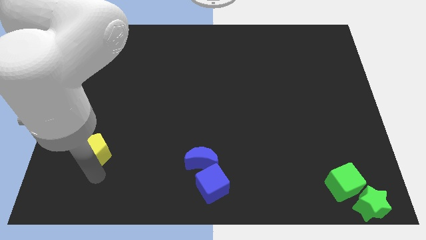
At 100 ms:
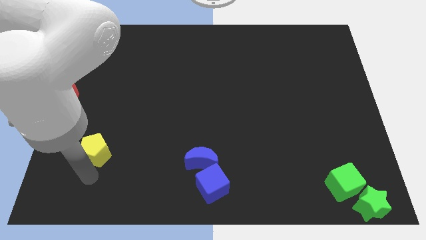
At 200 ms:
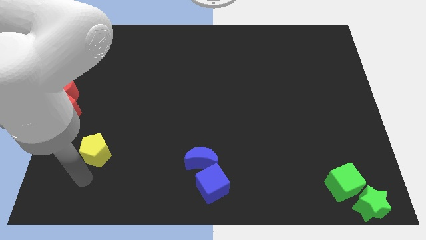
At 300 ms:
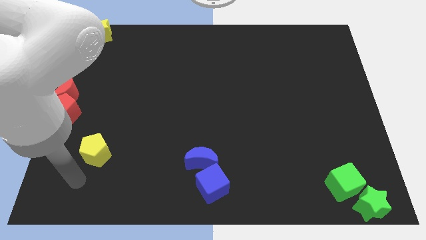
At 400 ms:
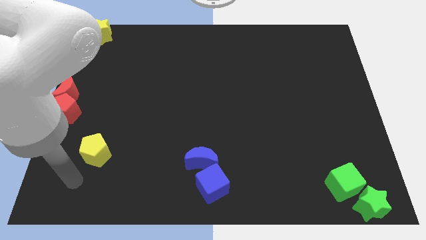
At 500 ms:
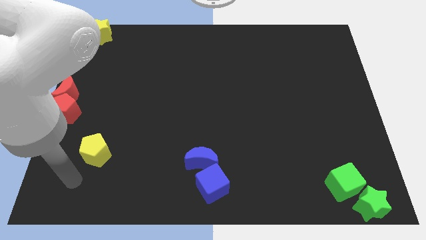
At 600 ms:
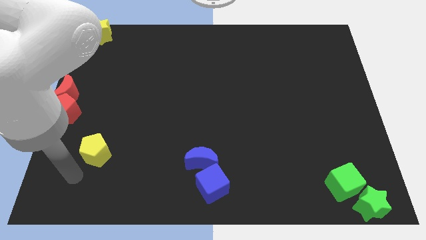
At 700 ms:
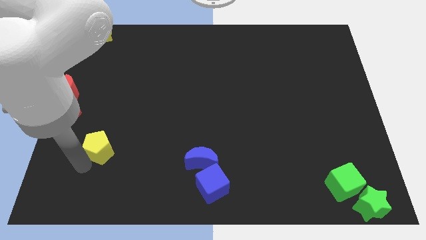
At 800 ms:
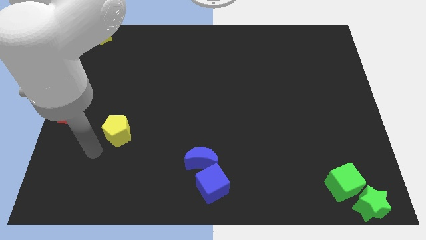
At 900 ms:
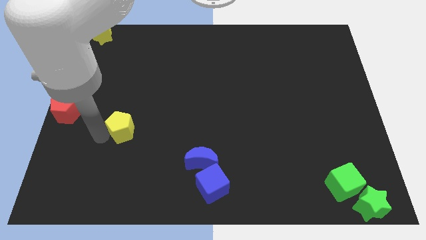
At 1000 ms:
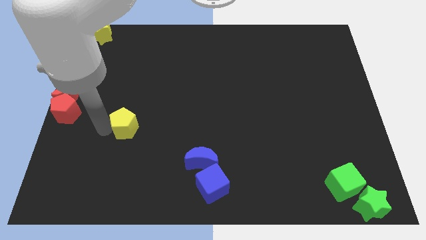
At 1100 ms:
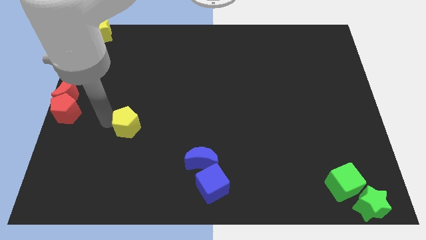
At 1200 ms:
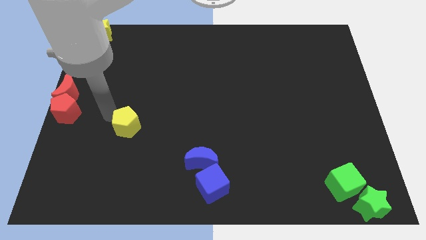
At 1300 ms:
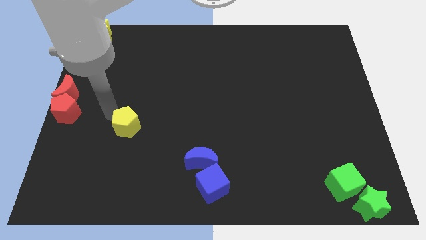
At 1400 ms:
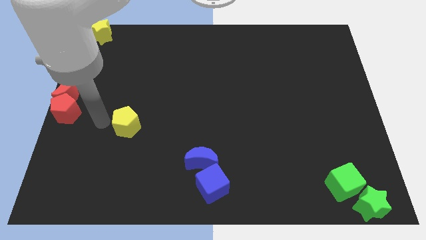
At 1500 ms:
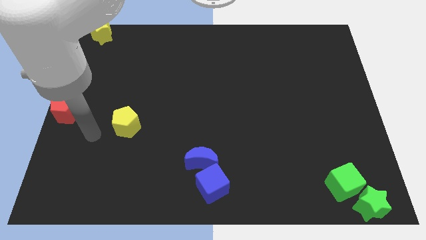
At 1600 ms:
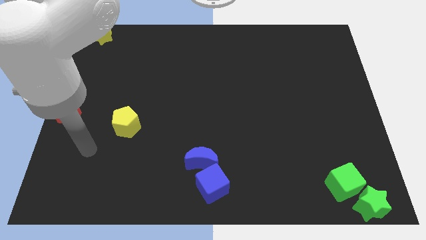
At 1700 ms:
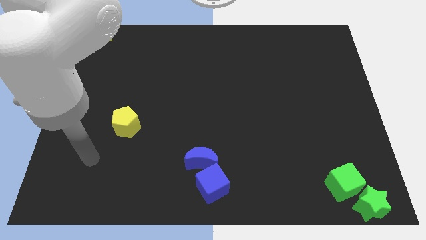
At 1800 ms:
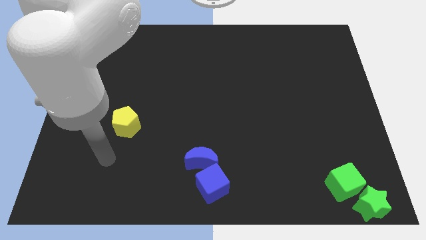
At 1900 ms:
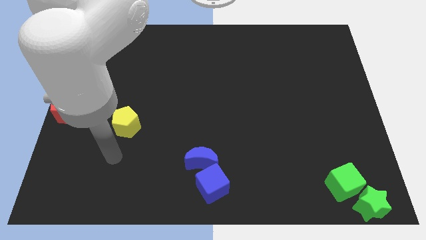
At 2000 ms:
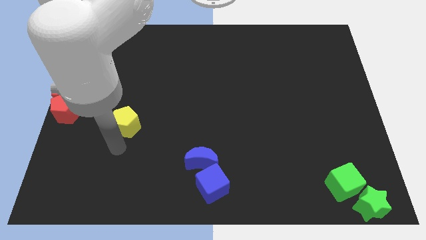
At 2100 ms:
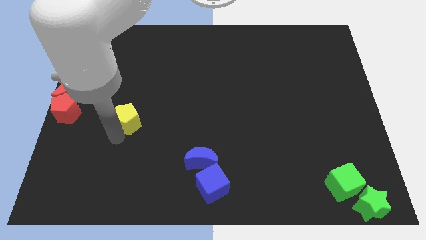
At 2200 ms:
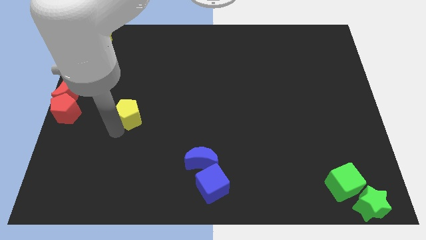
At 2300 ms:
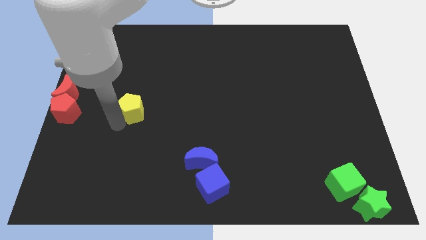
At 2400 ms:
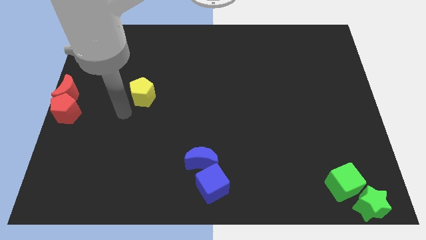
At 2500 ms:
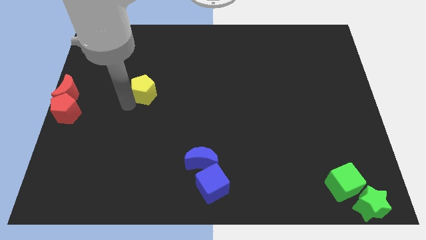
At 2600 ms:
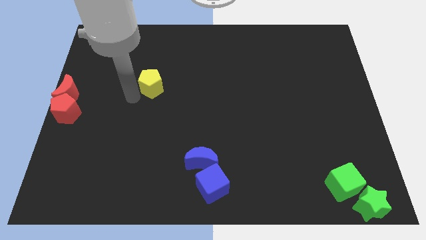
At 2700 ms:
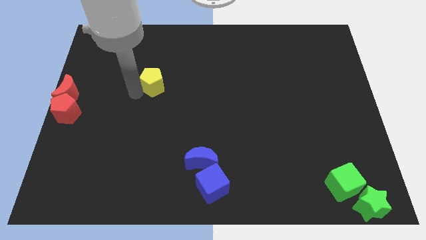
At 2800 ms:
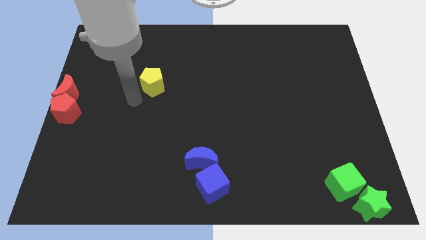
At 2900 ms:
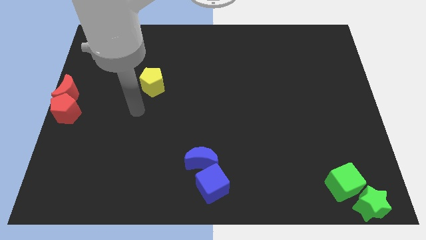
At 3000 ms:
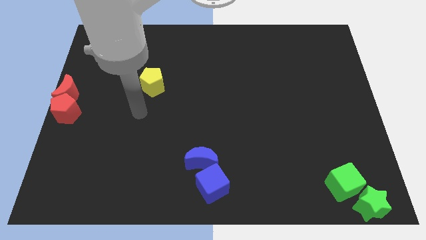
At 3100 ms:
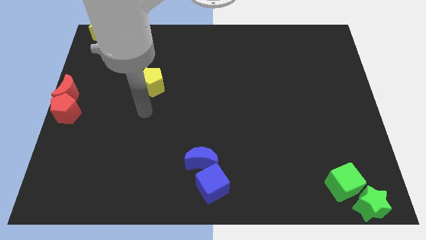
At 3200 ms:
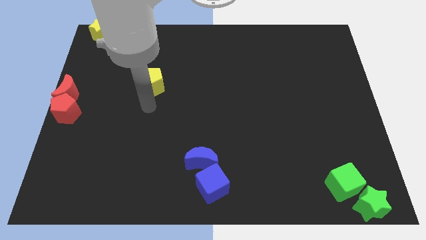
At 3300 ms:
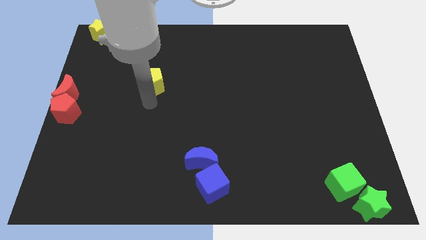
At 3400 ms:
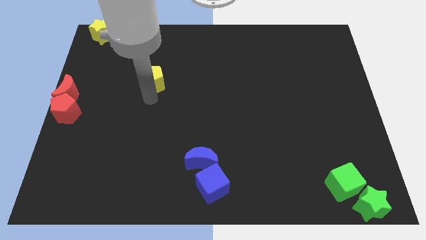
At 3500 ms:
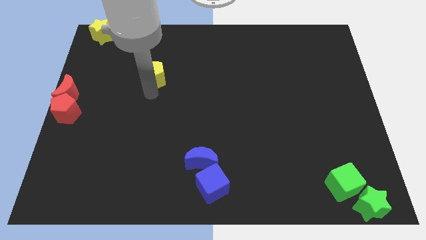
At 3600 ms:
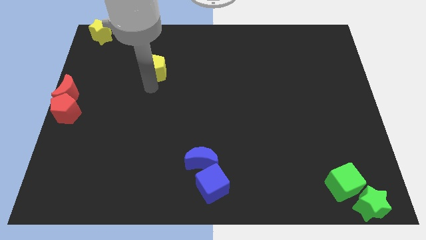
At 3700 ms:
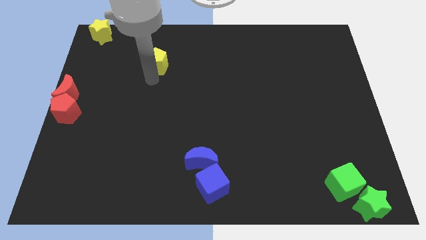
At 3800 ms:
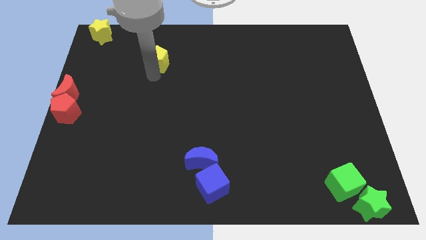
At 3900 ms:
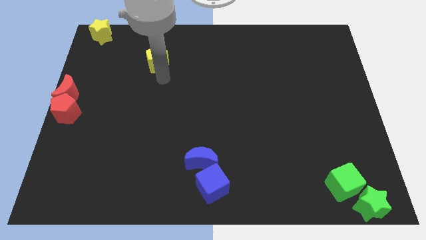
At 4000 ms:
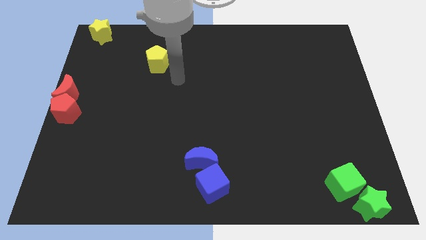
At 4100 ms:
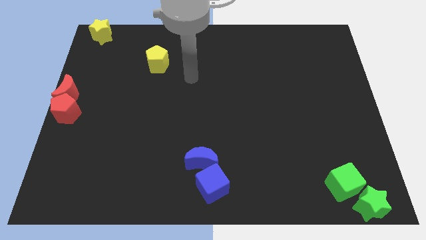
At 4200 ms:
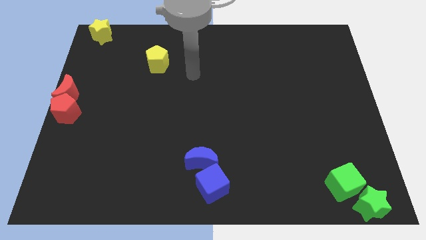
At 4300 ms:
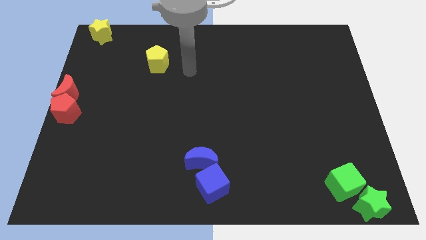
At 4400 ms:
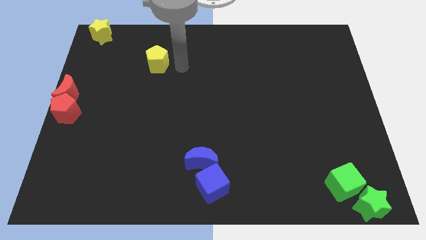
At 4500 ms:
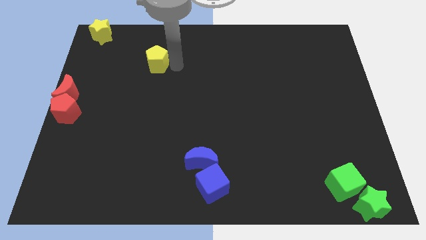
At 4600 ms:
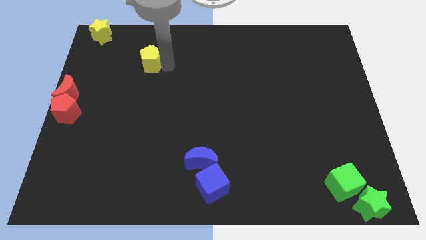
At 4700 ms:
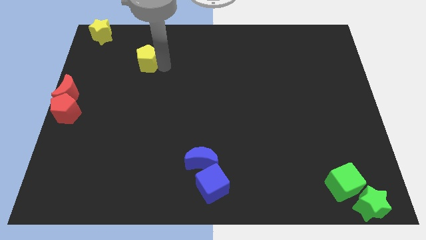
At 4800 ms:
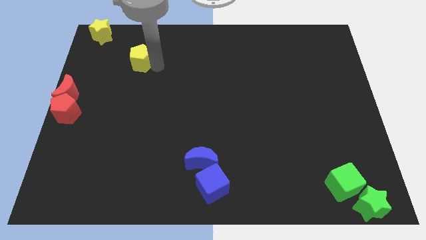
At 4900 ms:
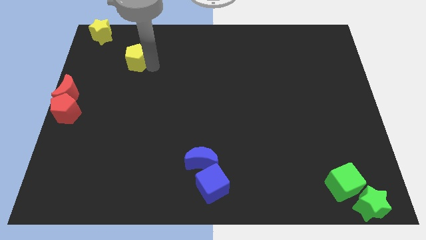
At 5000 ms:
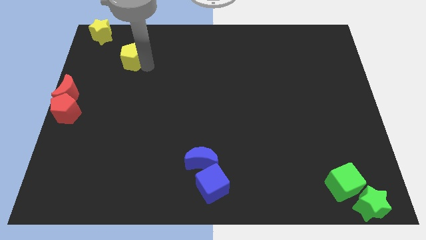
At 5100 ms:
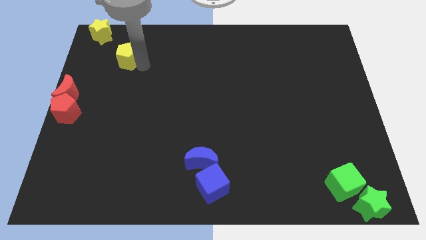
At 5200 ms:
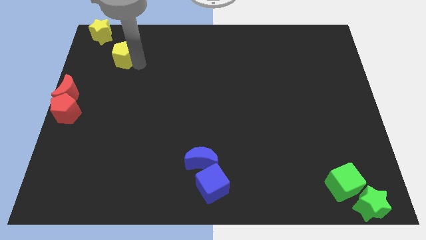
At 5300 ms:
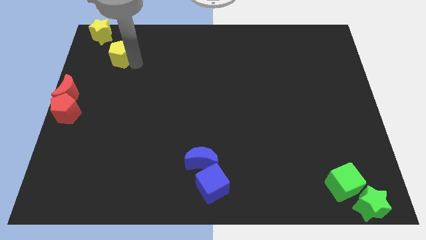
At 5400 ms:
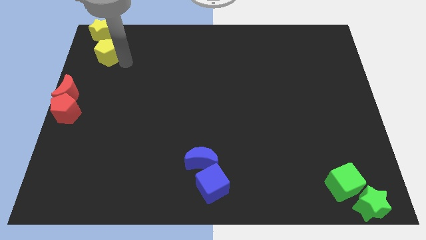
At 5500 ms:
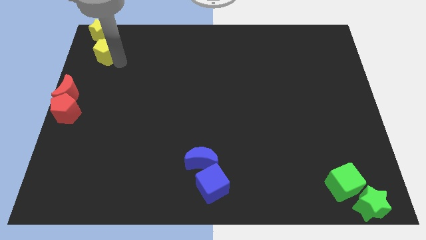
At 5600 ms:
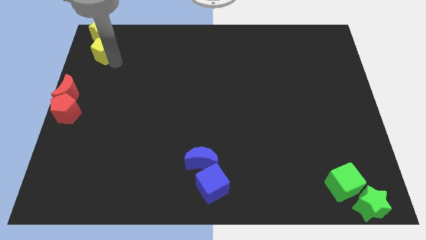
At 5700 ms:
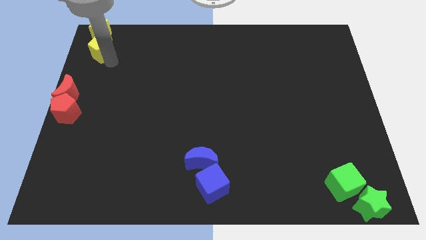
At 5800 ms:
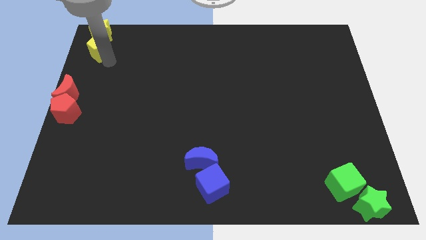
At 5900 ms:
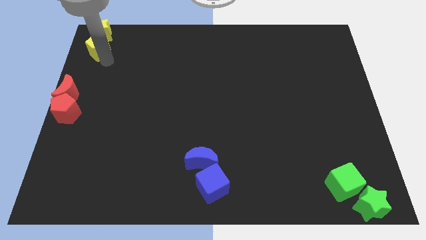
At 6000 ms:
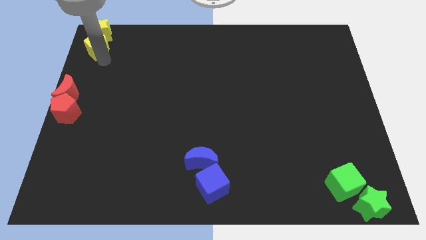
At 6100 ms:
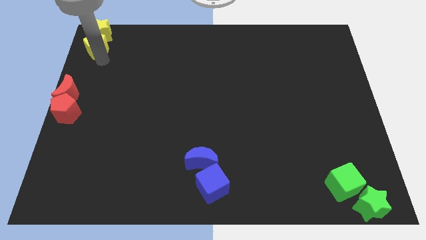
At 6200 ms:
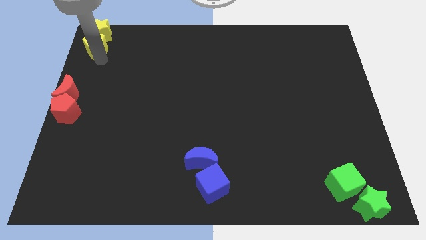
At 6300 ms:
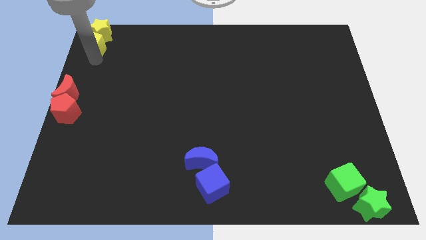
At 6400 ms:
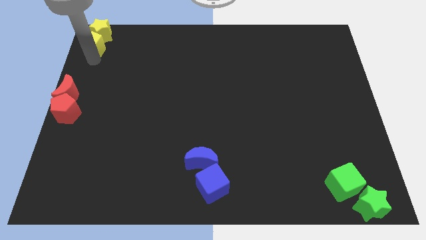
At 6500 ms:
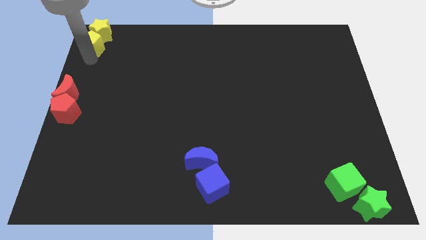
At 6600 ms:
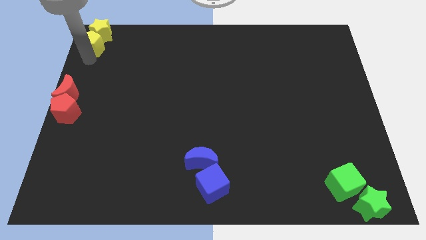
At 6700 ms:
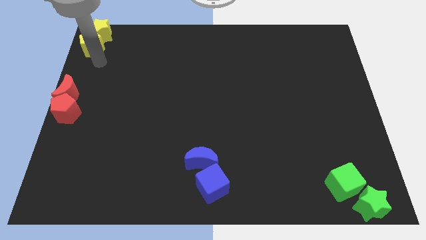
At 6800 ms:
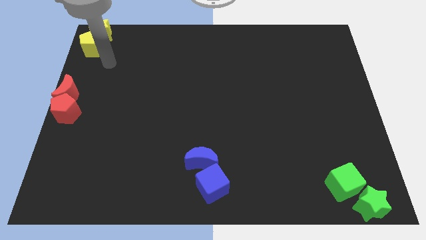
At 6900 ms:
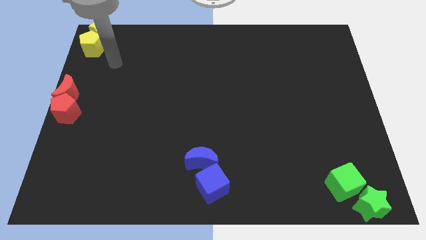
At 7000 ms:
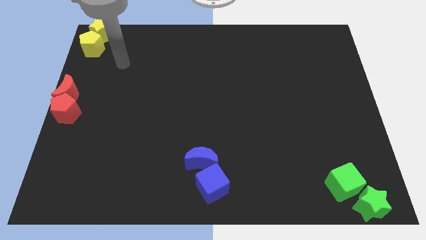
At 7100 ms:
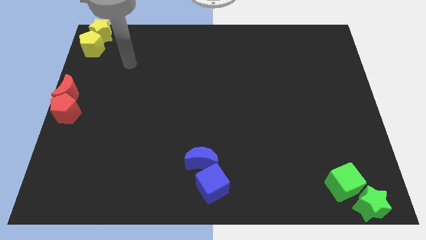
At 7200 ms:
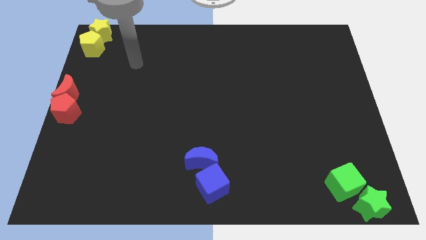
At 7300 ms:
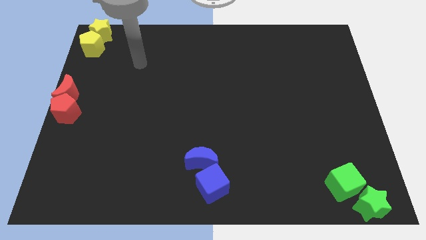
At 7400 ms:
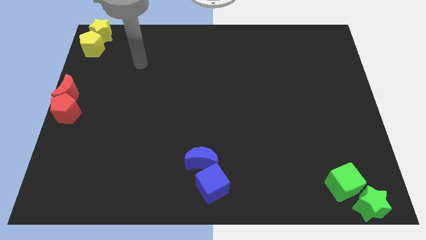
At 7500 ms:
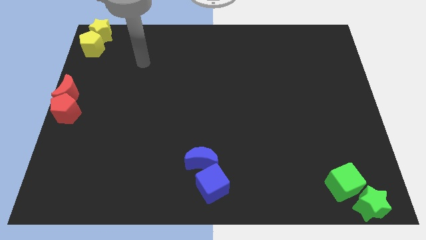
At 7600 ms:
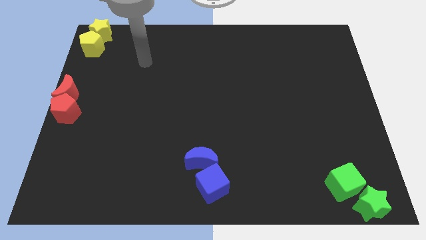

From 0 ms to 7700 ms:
move the yellow pentagon to the yellow star

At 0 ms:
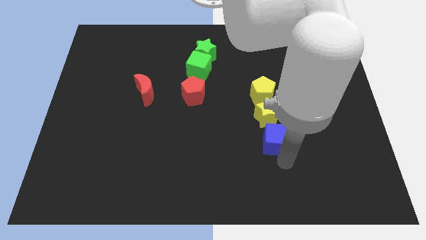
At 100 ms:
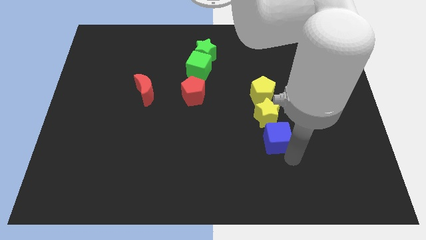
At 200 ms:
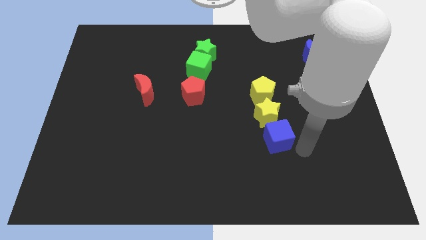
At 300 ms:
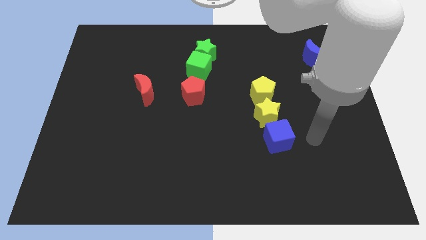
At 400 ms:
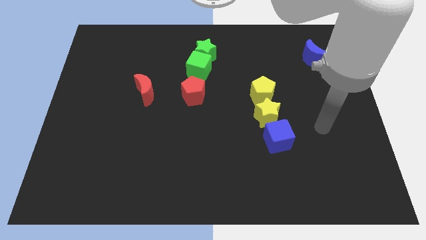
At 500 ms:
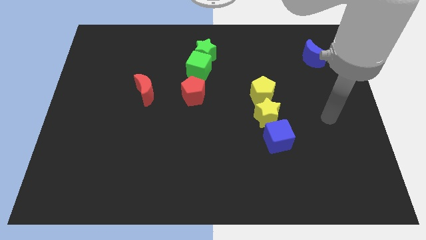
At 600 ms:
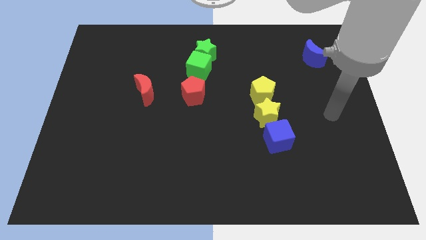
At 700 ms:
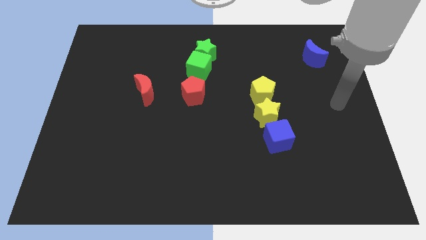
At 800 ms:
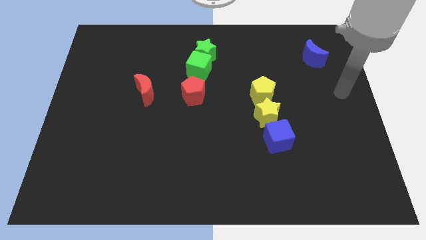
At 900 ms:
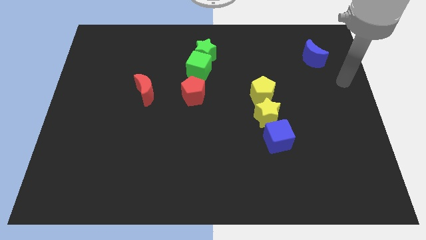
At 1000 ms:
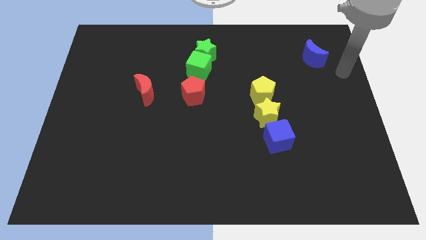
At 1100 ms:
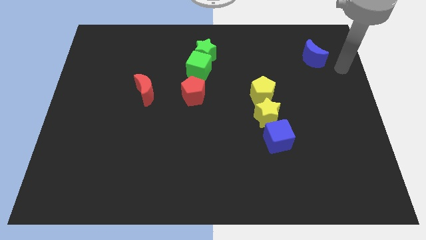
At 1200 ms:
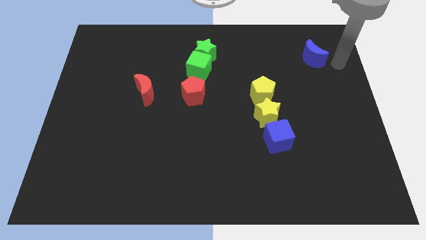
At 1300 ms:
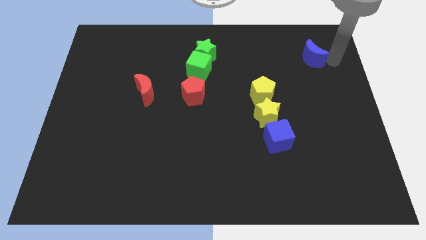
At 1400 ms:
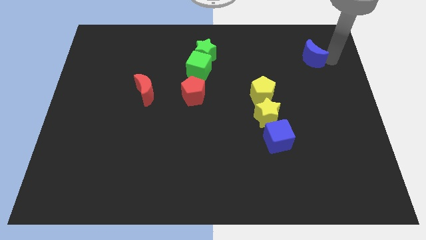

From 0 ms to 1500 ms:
place the arm to the right of the blue moon
